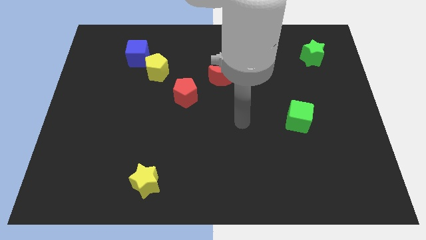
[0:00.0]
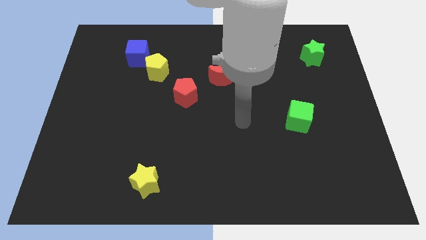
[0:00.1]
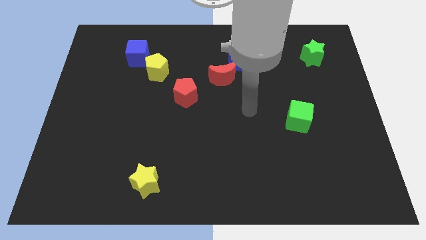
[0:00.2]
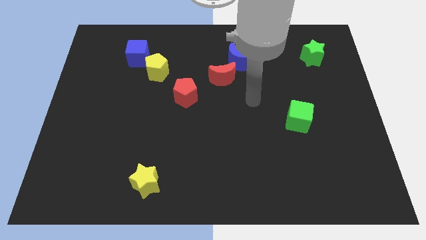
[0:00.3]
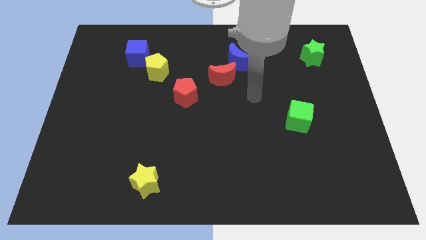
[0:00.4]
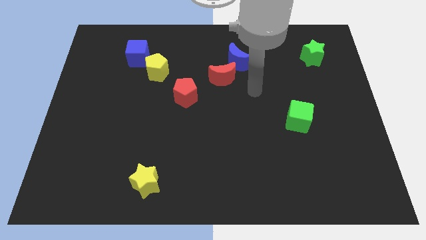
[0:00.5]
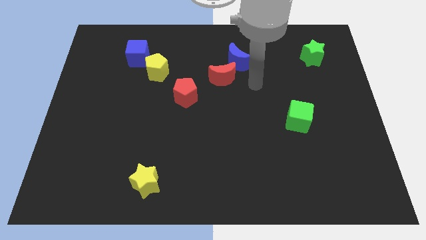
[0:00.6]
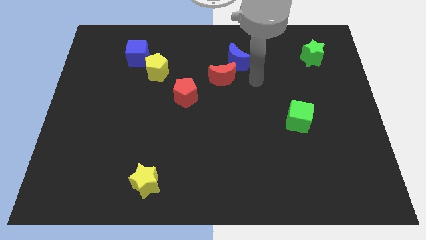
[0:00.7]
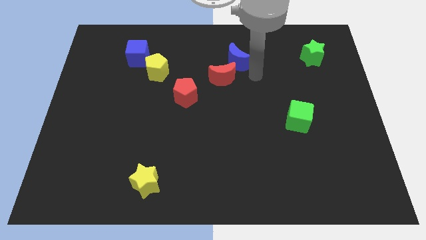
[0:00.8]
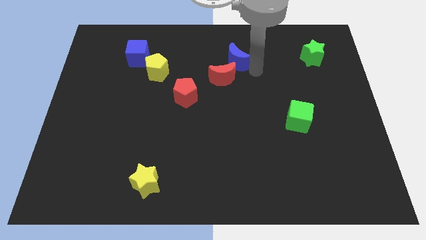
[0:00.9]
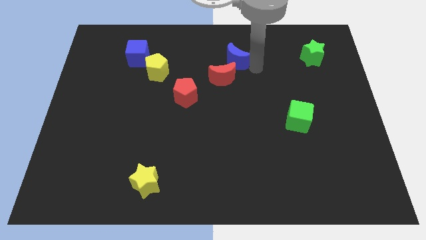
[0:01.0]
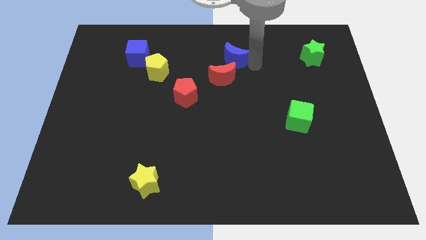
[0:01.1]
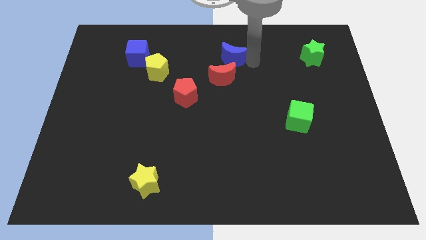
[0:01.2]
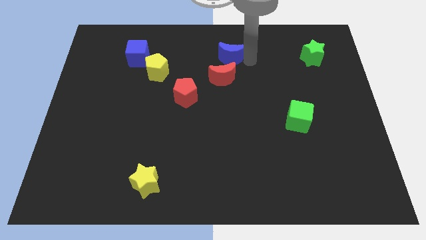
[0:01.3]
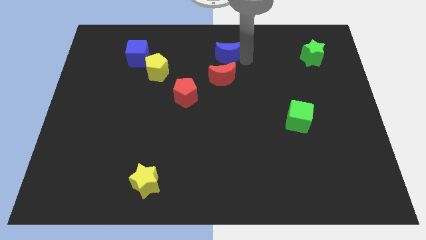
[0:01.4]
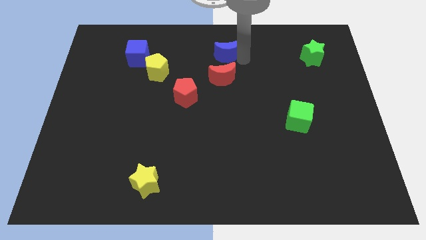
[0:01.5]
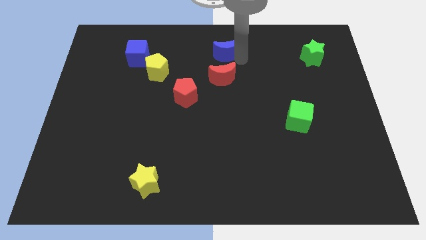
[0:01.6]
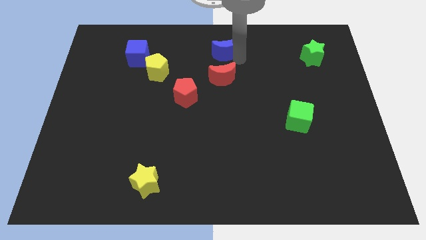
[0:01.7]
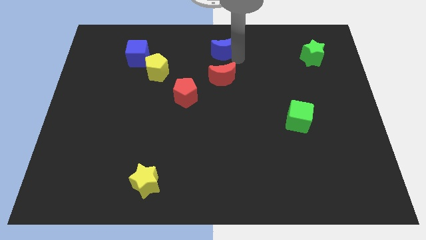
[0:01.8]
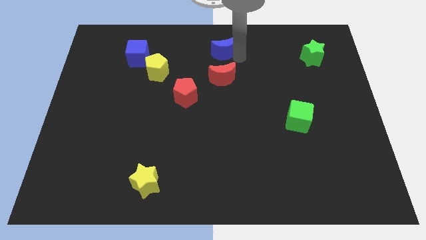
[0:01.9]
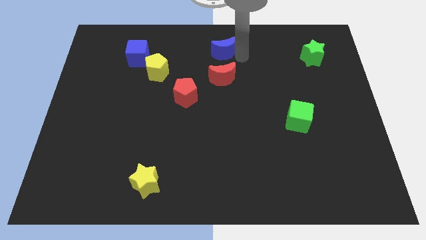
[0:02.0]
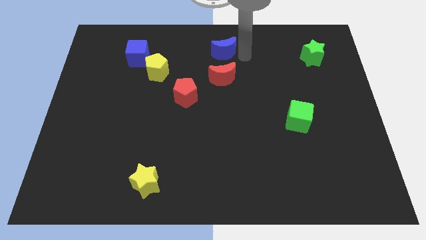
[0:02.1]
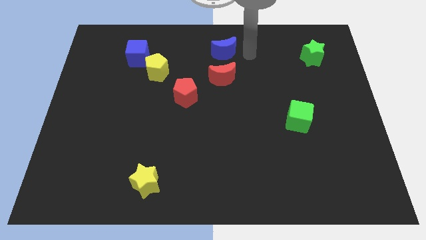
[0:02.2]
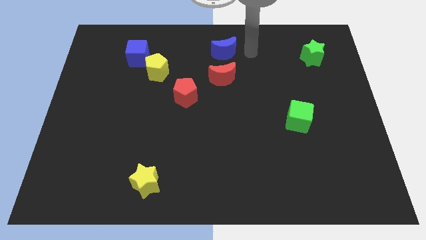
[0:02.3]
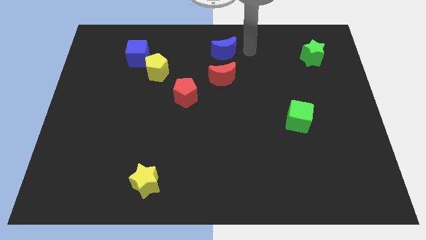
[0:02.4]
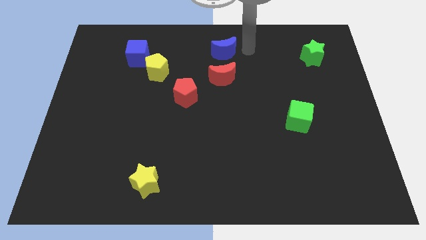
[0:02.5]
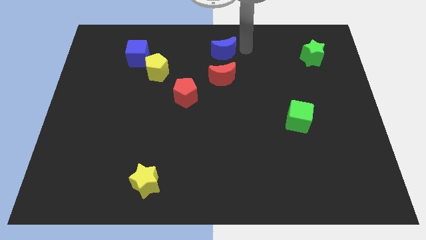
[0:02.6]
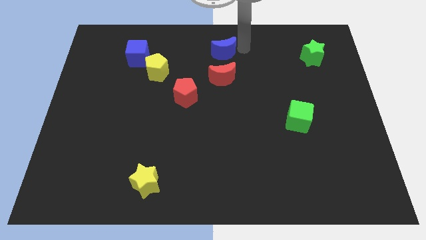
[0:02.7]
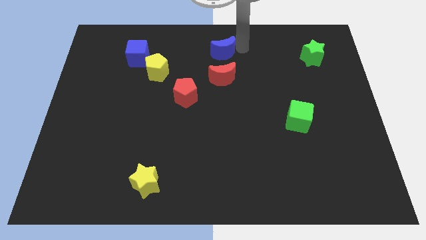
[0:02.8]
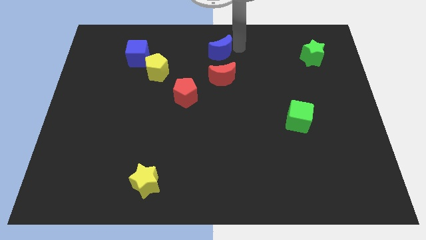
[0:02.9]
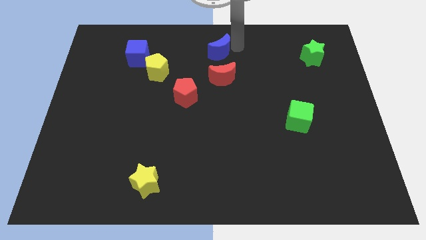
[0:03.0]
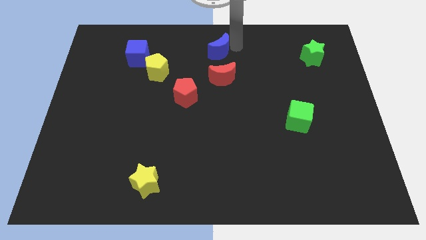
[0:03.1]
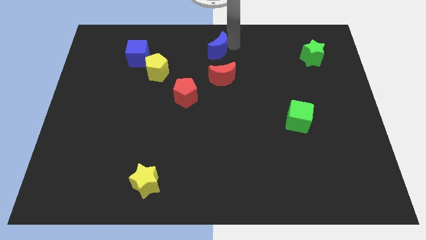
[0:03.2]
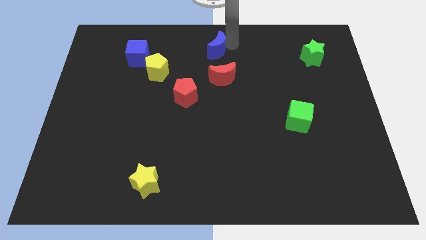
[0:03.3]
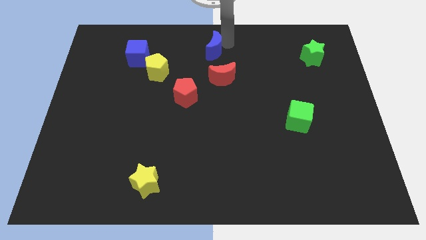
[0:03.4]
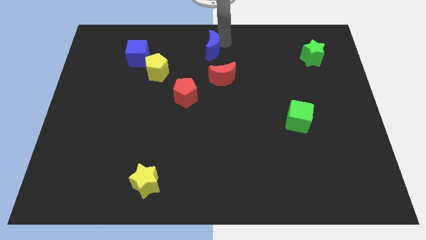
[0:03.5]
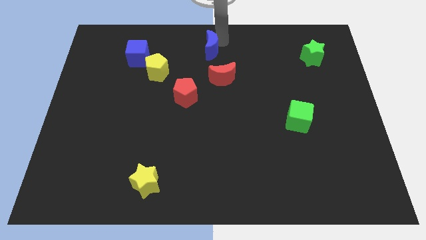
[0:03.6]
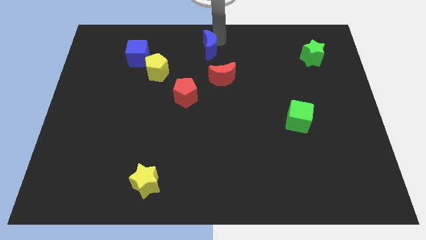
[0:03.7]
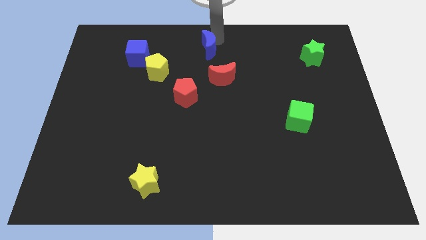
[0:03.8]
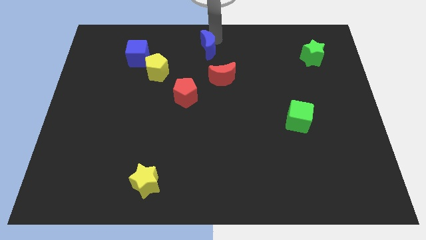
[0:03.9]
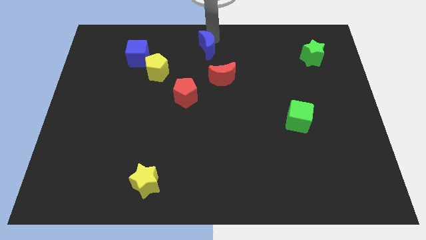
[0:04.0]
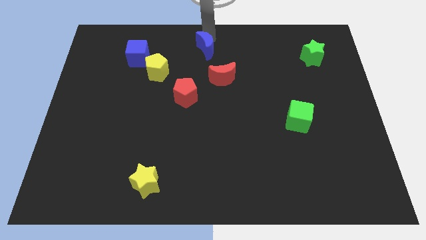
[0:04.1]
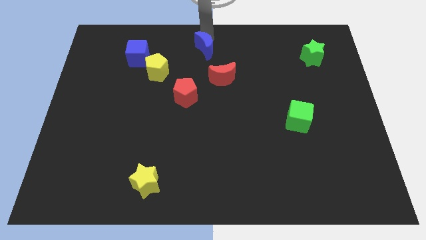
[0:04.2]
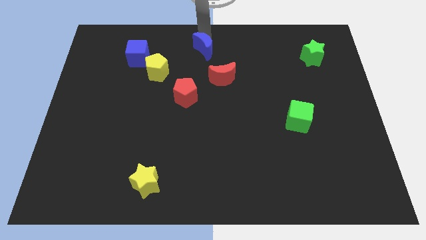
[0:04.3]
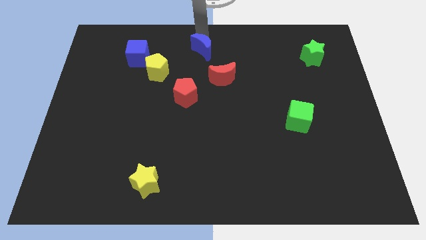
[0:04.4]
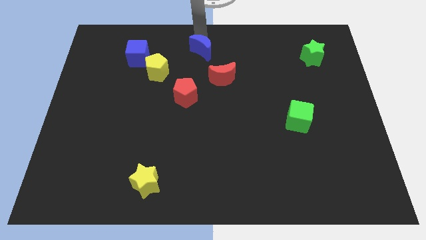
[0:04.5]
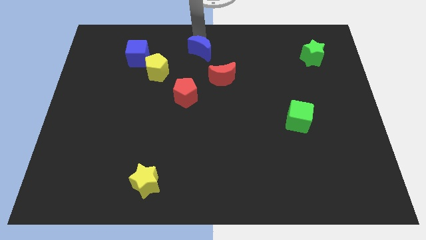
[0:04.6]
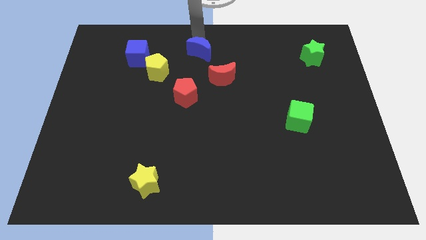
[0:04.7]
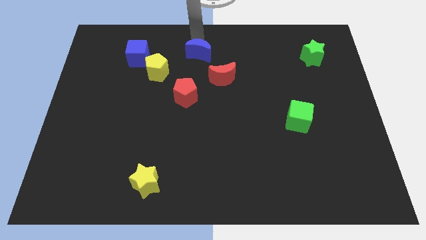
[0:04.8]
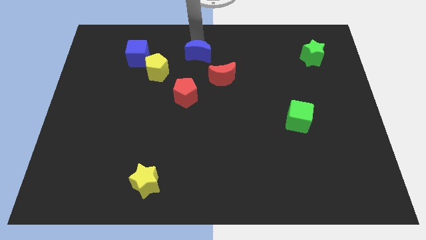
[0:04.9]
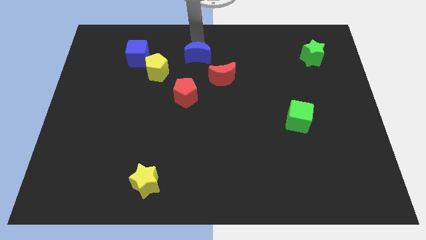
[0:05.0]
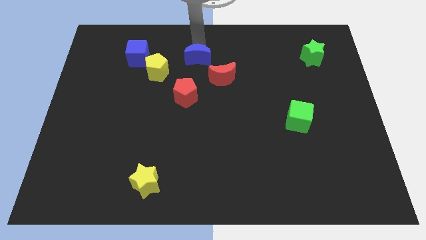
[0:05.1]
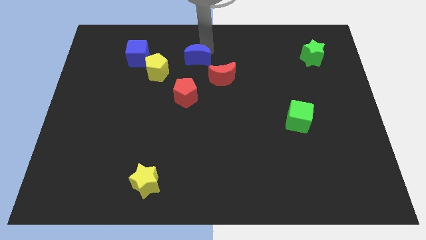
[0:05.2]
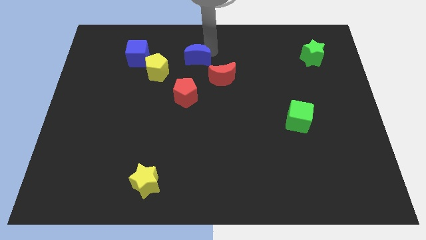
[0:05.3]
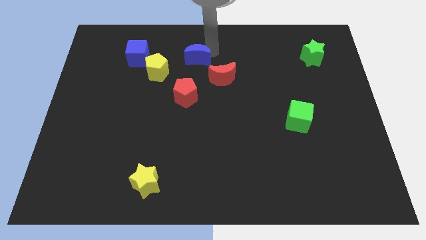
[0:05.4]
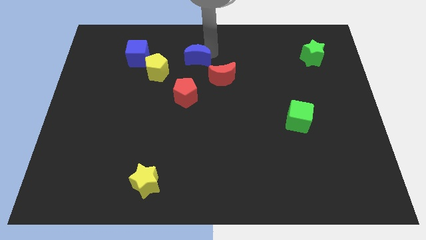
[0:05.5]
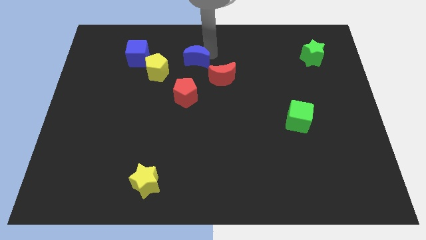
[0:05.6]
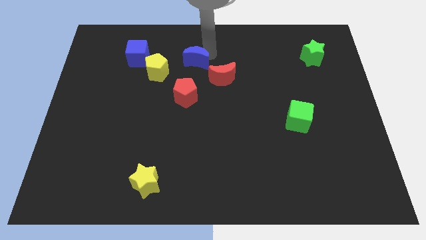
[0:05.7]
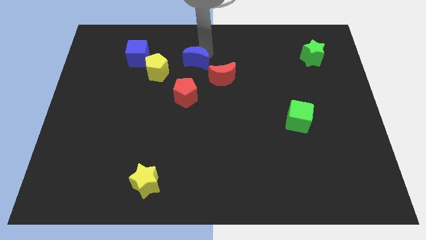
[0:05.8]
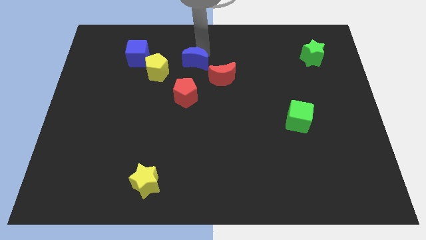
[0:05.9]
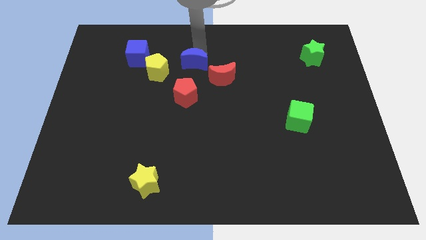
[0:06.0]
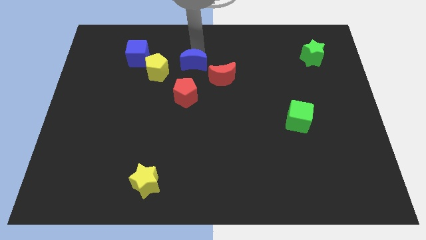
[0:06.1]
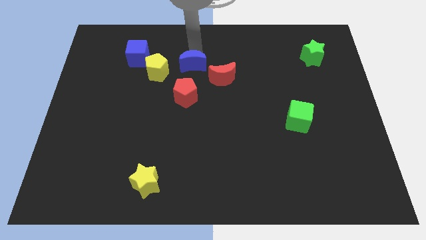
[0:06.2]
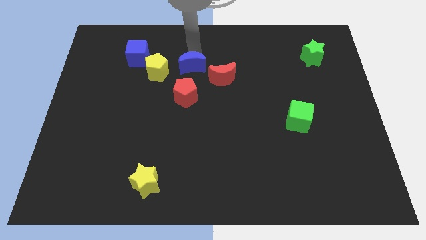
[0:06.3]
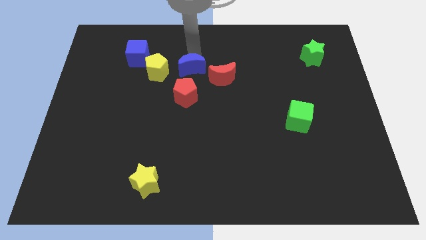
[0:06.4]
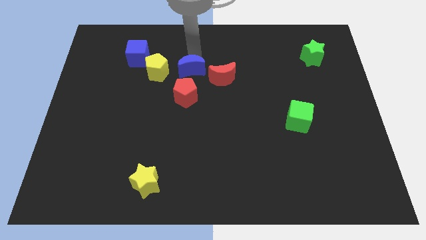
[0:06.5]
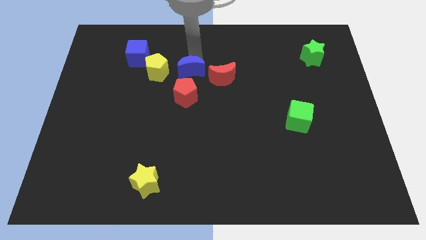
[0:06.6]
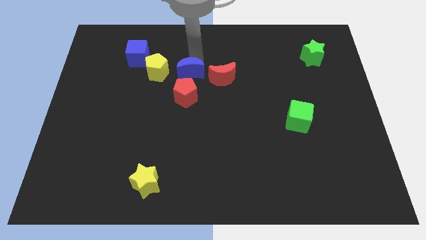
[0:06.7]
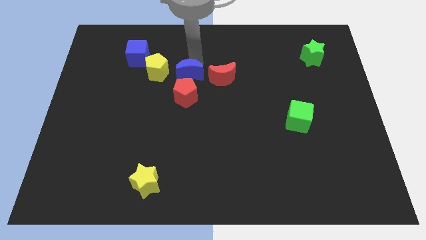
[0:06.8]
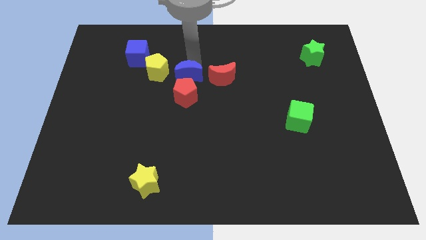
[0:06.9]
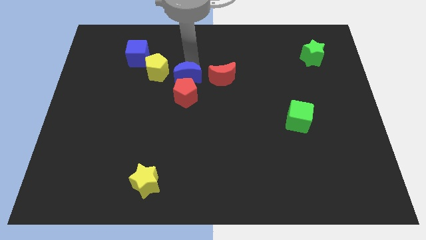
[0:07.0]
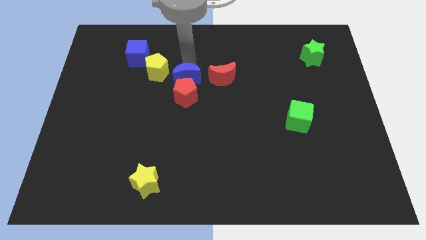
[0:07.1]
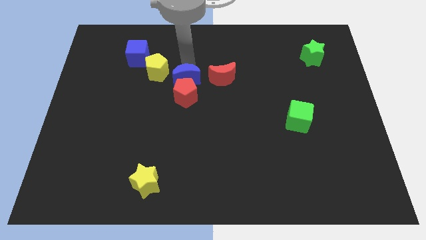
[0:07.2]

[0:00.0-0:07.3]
slide the blue moon close to the red pentagon

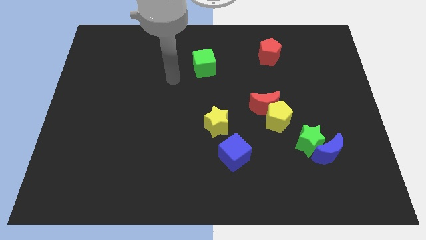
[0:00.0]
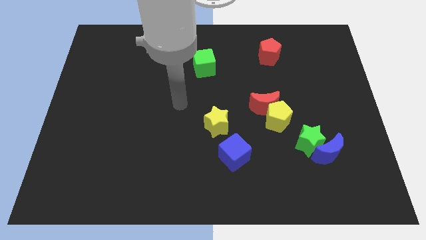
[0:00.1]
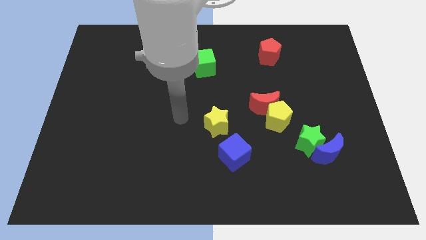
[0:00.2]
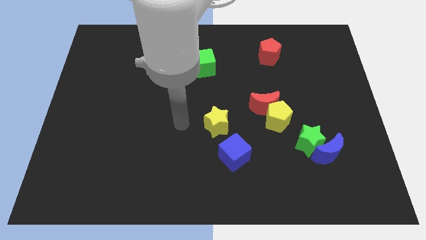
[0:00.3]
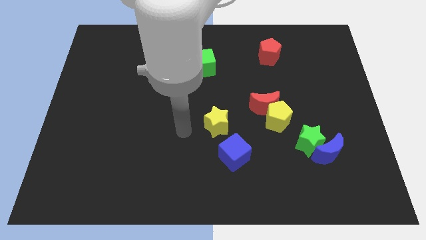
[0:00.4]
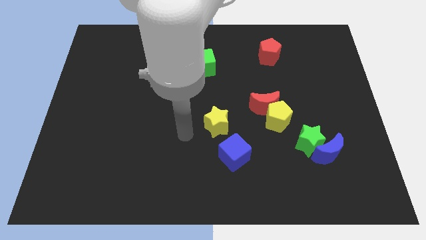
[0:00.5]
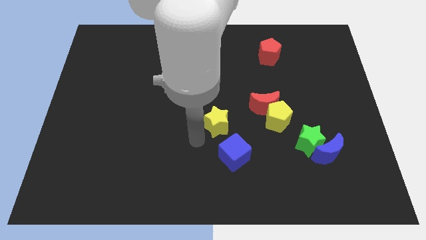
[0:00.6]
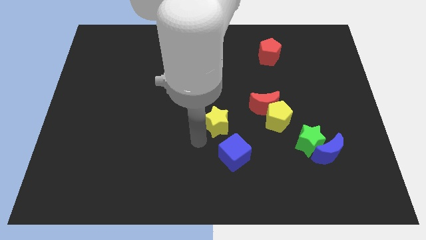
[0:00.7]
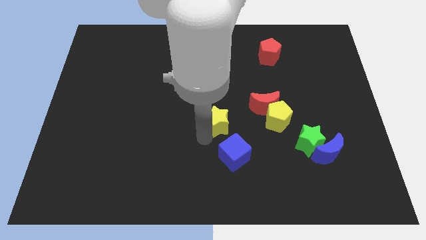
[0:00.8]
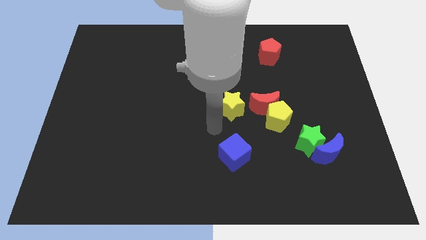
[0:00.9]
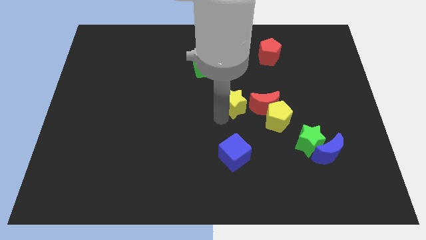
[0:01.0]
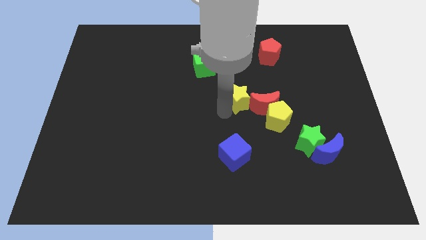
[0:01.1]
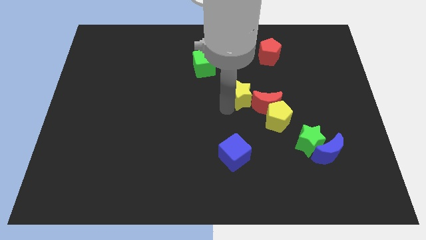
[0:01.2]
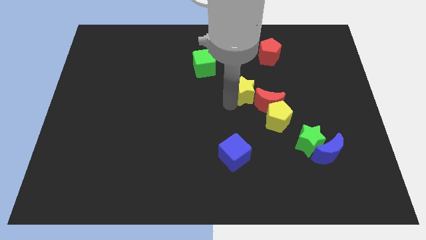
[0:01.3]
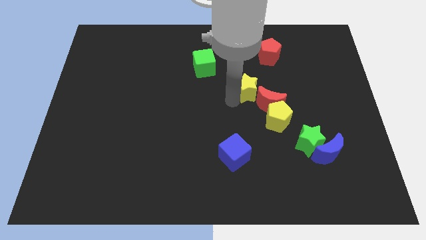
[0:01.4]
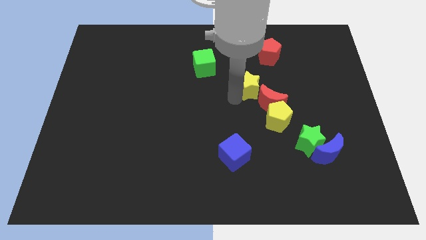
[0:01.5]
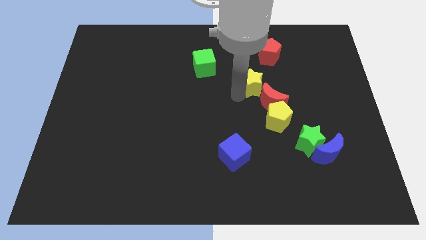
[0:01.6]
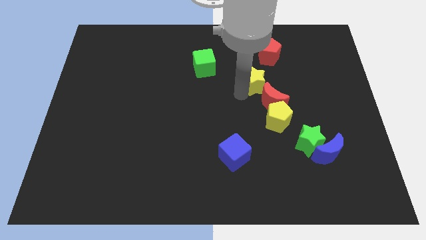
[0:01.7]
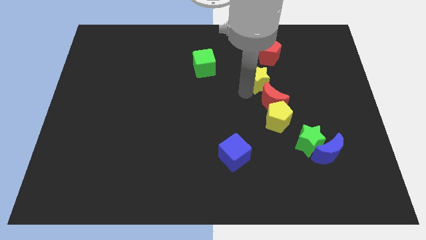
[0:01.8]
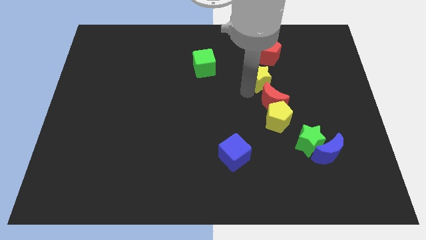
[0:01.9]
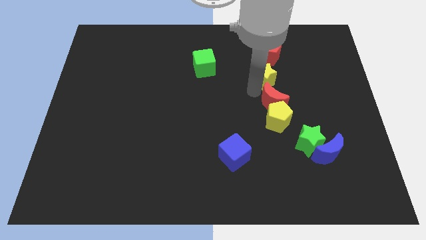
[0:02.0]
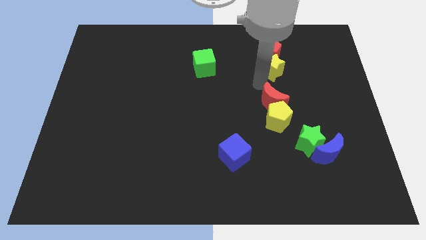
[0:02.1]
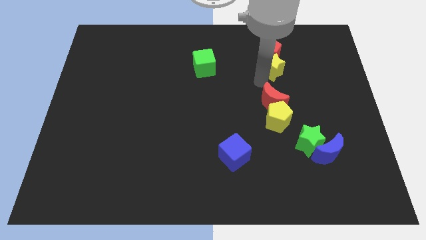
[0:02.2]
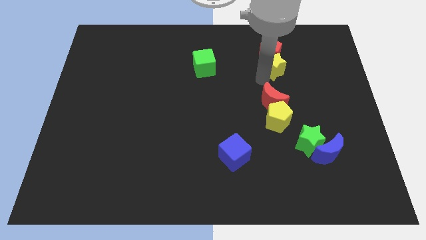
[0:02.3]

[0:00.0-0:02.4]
move the yellow star towards the red pentagon
